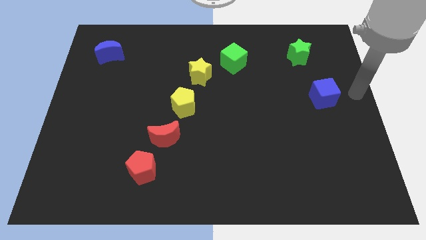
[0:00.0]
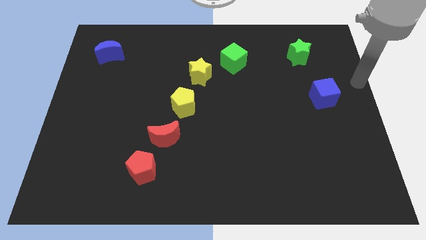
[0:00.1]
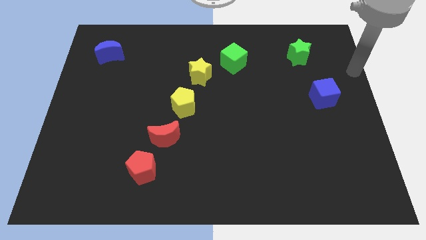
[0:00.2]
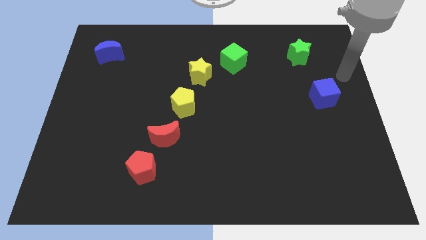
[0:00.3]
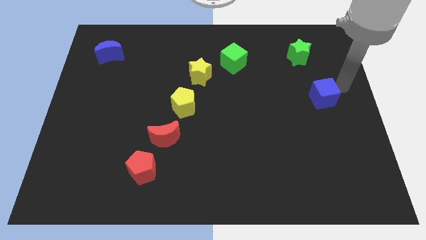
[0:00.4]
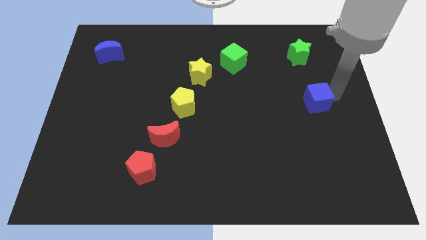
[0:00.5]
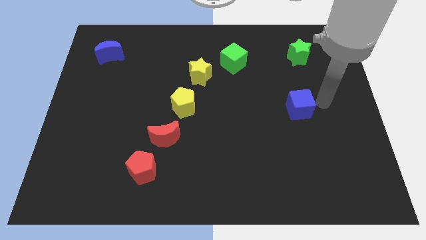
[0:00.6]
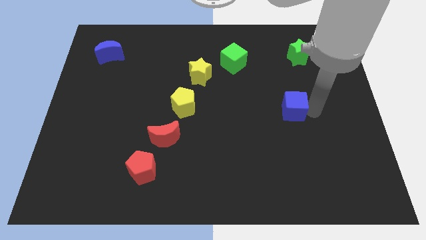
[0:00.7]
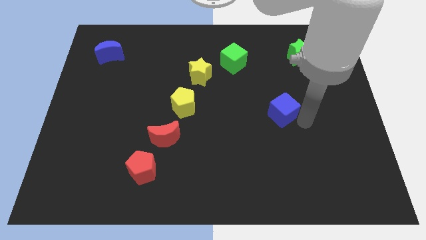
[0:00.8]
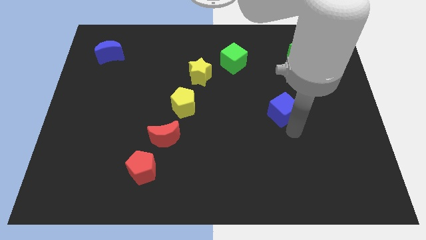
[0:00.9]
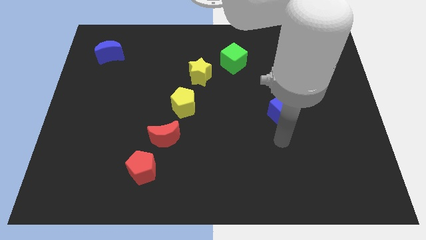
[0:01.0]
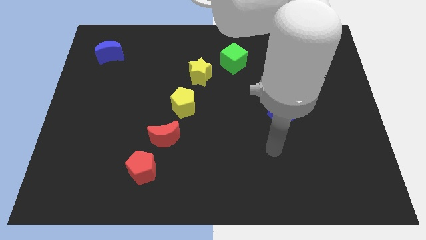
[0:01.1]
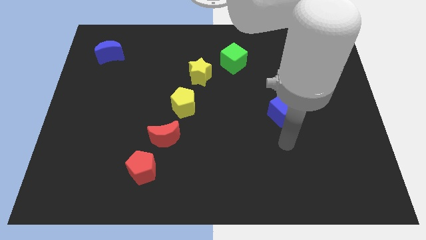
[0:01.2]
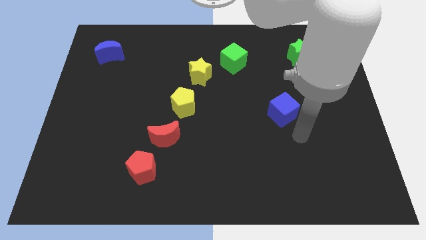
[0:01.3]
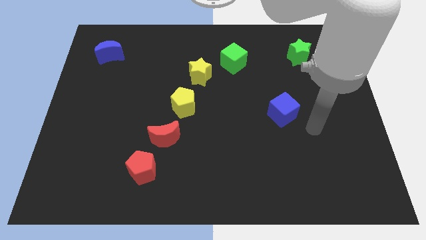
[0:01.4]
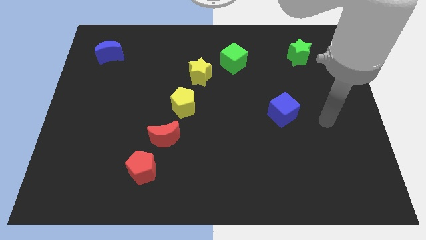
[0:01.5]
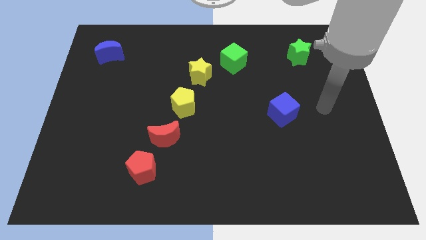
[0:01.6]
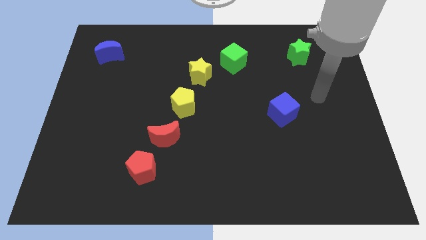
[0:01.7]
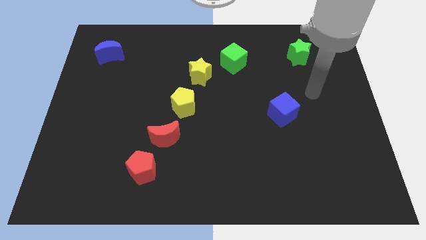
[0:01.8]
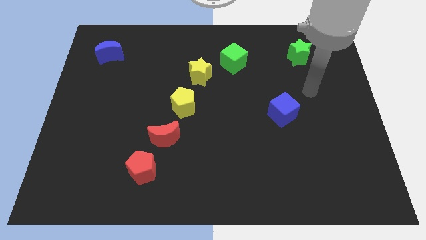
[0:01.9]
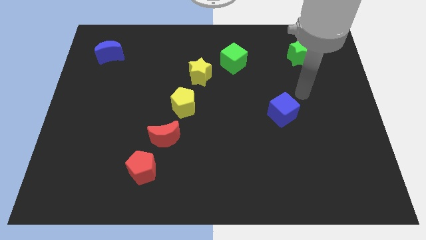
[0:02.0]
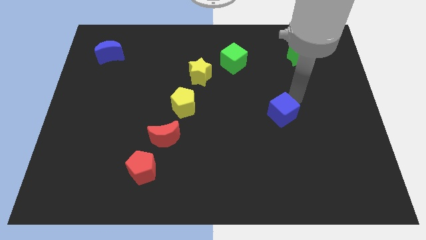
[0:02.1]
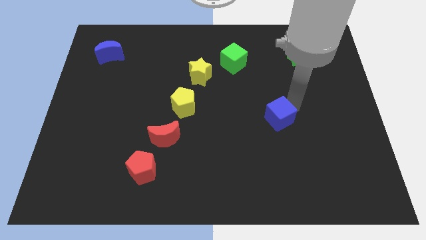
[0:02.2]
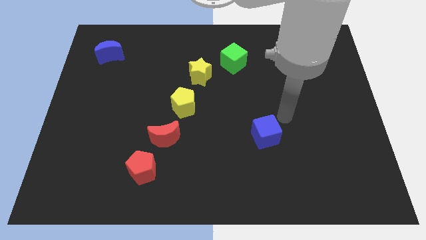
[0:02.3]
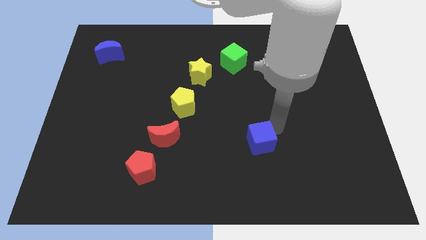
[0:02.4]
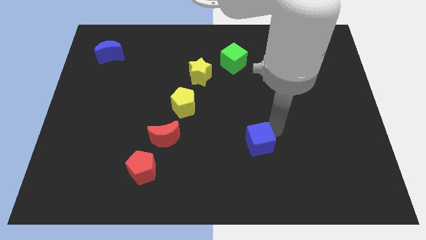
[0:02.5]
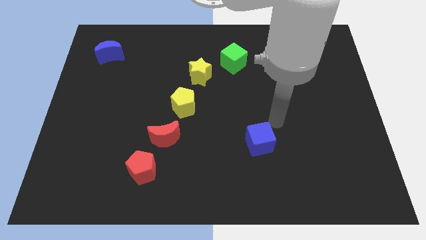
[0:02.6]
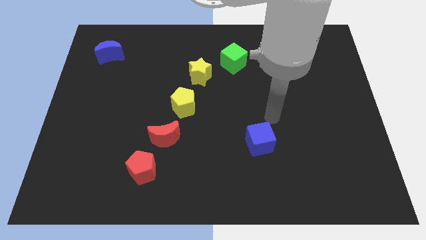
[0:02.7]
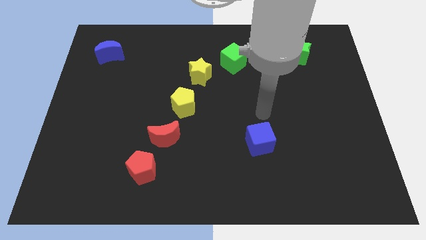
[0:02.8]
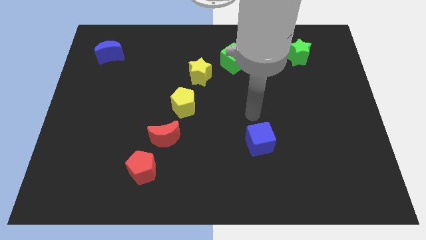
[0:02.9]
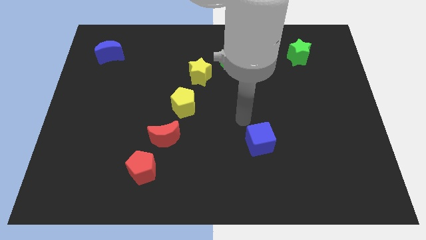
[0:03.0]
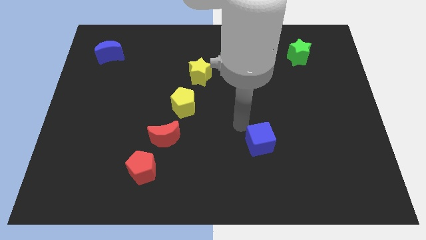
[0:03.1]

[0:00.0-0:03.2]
place the blue cube horizontal to the red crescent

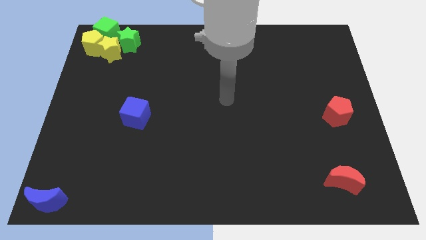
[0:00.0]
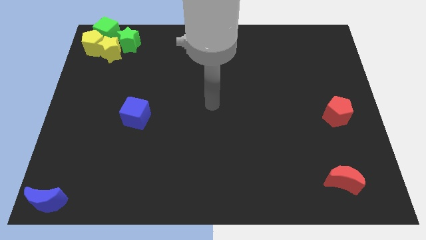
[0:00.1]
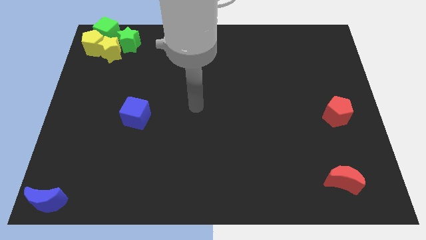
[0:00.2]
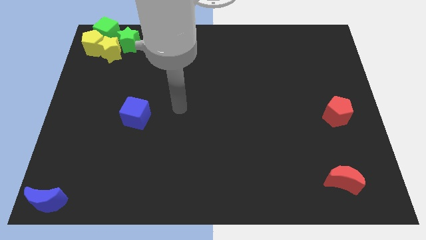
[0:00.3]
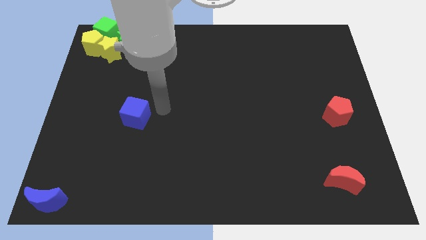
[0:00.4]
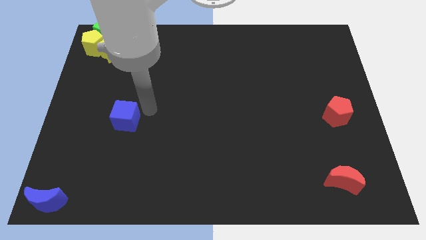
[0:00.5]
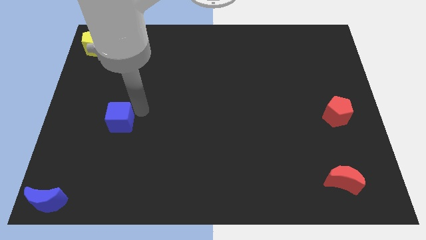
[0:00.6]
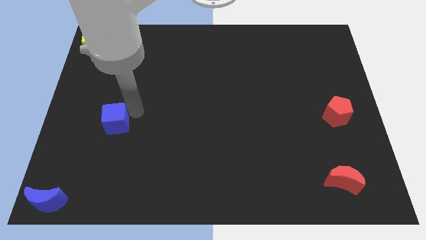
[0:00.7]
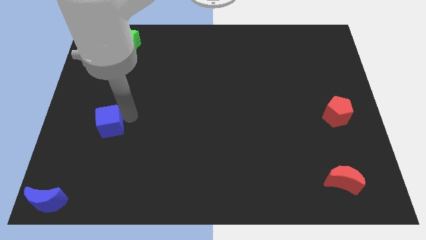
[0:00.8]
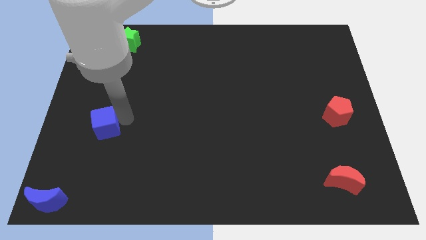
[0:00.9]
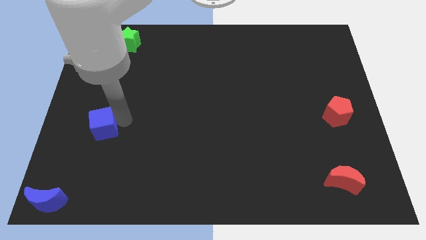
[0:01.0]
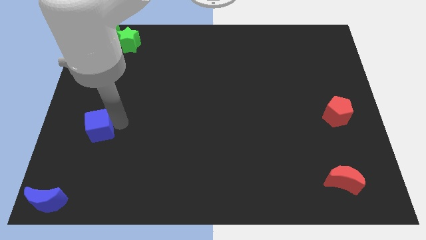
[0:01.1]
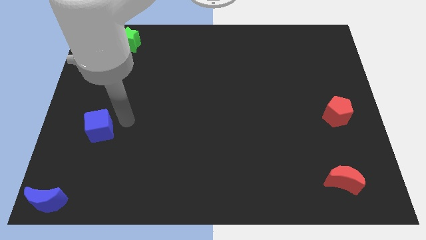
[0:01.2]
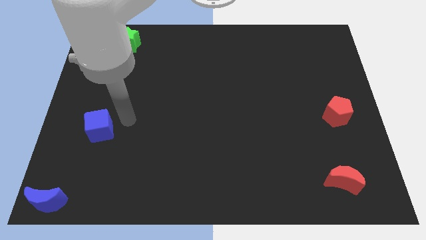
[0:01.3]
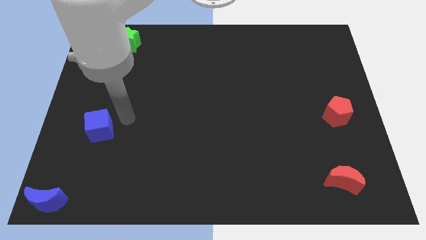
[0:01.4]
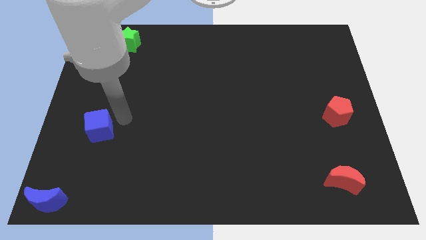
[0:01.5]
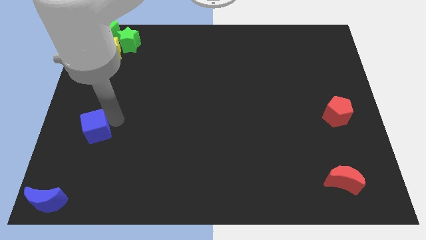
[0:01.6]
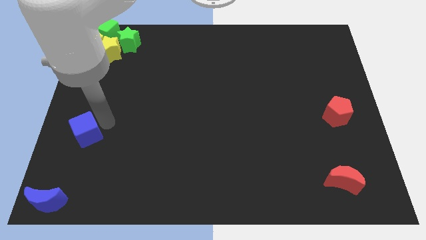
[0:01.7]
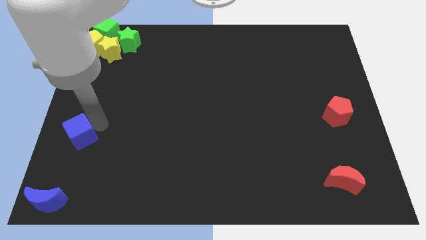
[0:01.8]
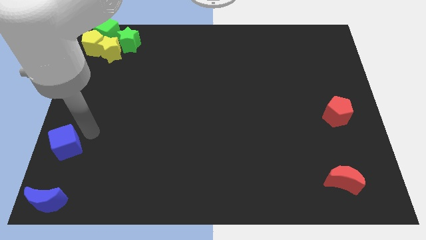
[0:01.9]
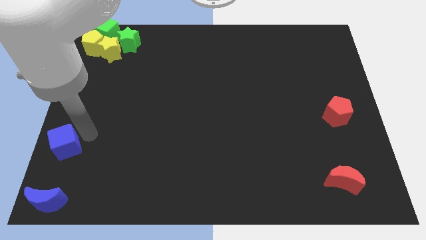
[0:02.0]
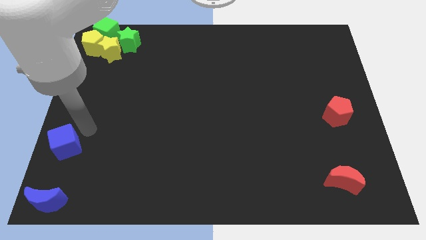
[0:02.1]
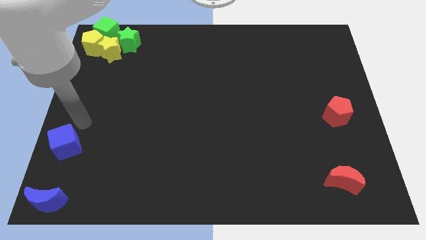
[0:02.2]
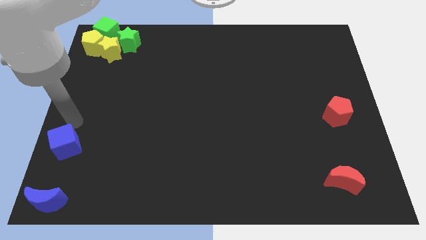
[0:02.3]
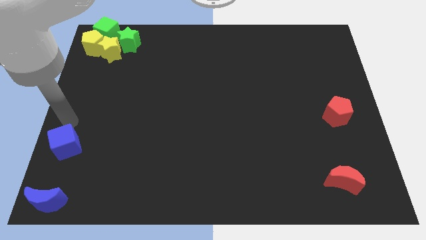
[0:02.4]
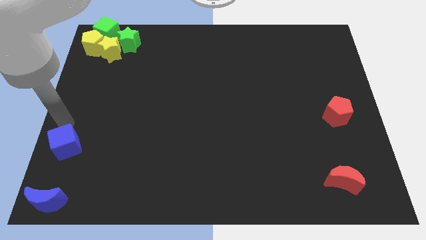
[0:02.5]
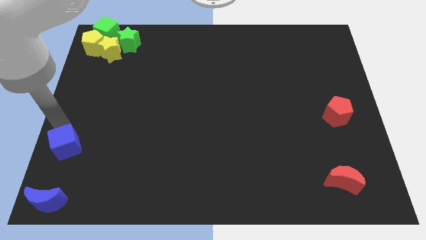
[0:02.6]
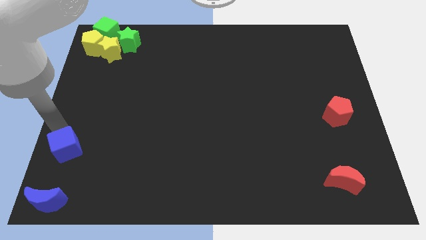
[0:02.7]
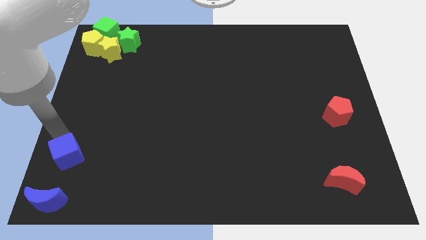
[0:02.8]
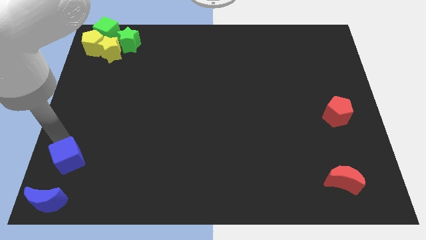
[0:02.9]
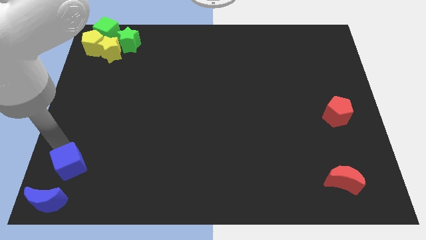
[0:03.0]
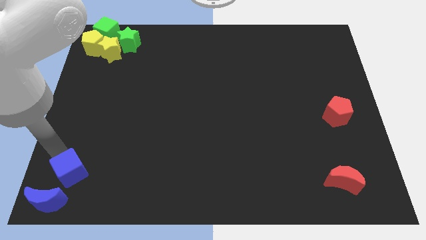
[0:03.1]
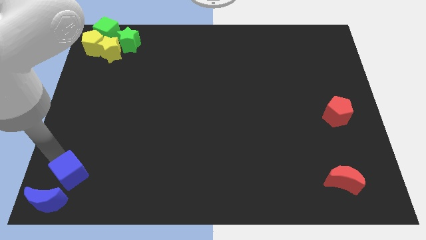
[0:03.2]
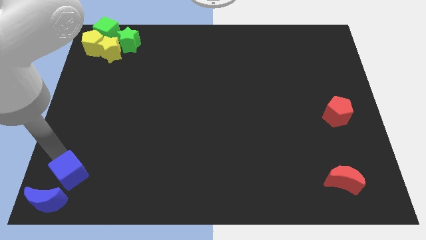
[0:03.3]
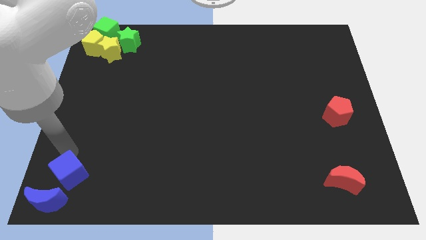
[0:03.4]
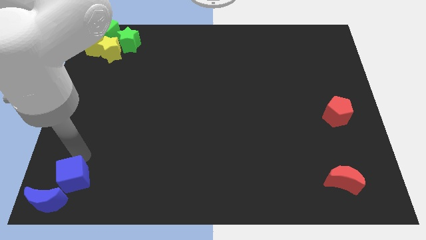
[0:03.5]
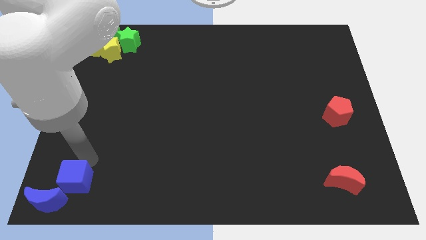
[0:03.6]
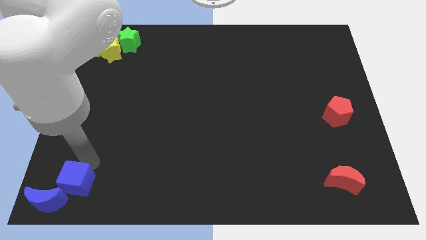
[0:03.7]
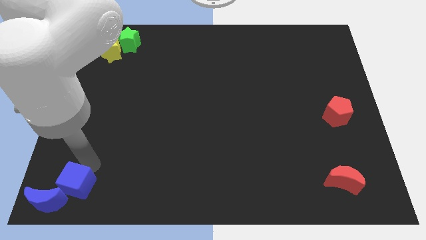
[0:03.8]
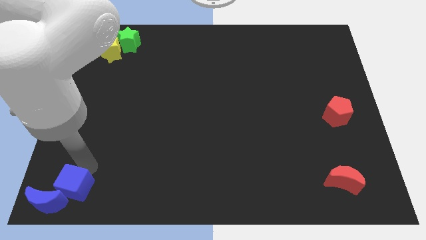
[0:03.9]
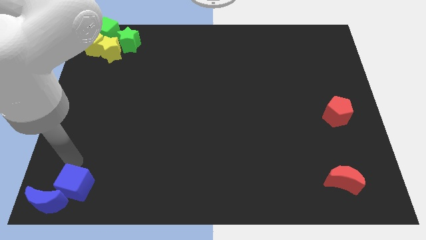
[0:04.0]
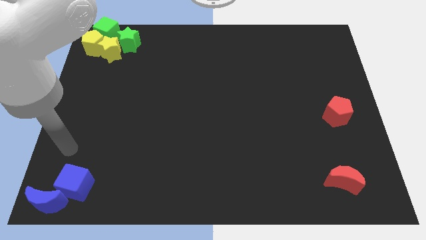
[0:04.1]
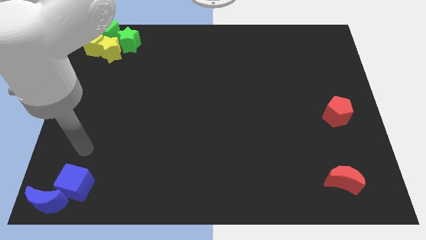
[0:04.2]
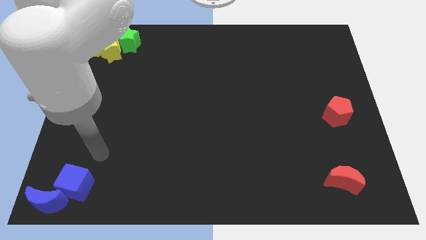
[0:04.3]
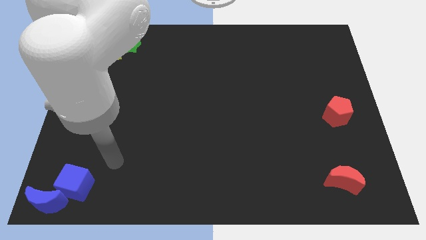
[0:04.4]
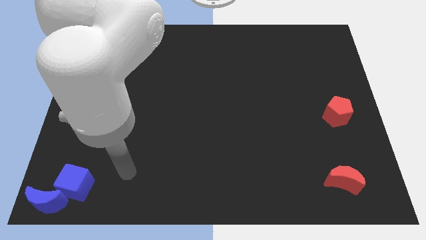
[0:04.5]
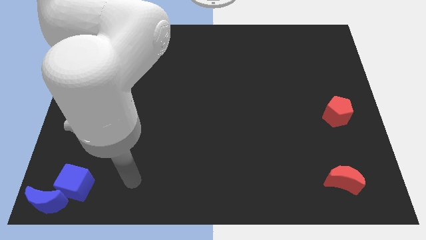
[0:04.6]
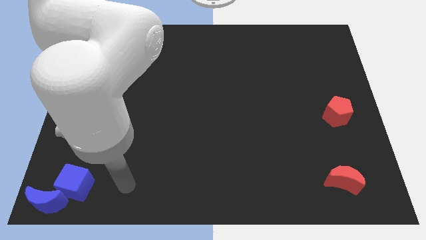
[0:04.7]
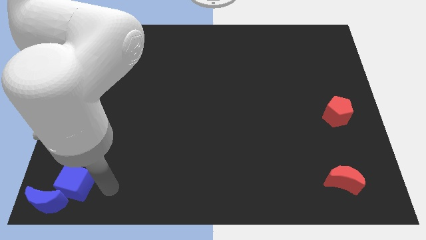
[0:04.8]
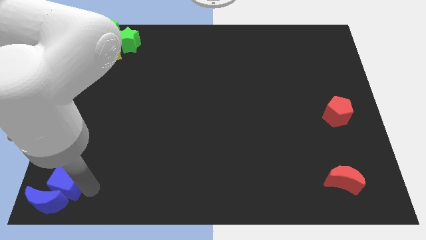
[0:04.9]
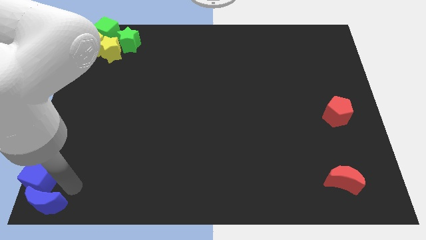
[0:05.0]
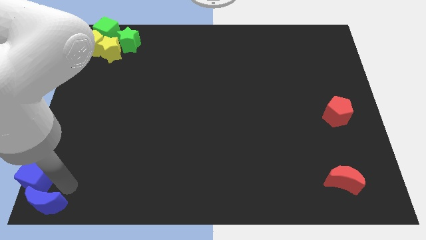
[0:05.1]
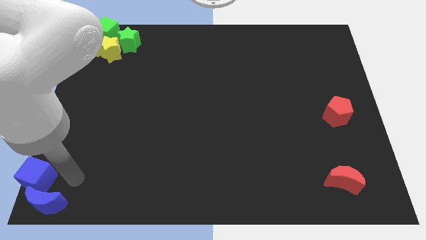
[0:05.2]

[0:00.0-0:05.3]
push the blue cube into the blue crescent

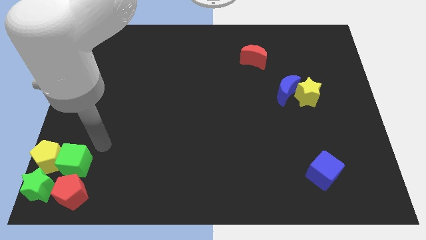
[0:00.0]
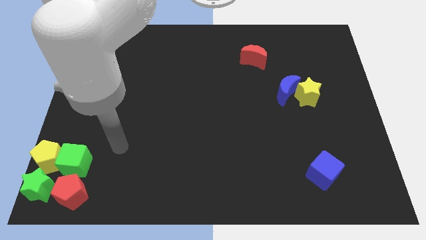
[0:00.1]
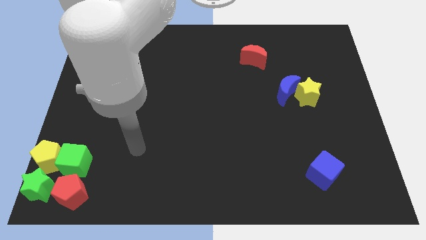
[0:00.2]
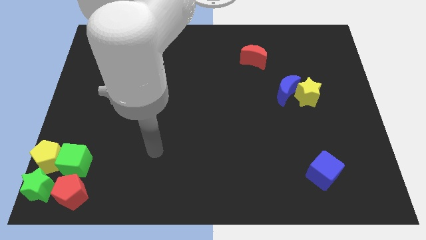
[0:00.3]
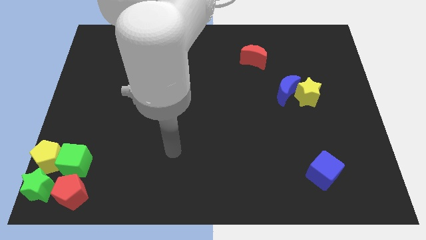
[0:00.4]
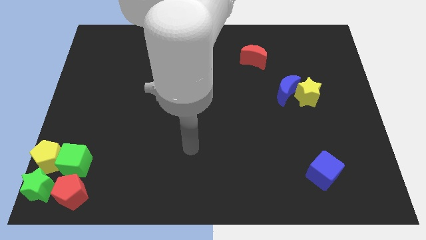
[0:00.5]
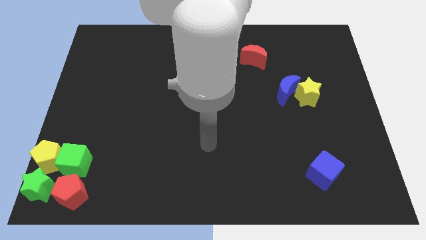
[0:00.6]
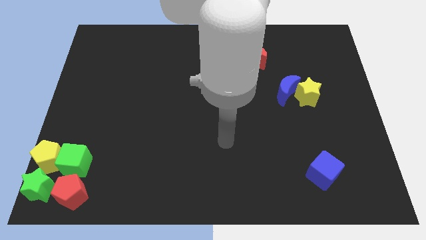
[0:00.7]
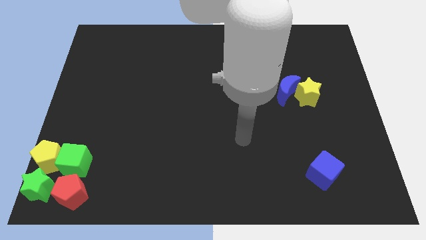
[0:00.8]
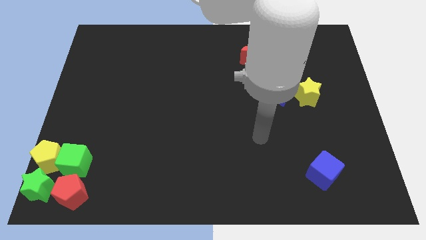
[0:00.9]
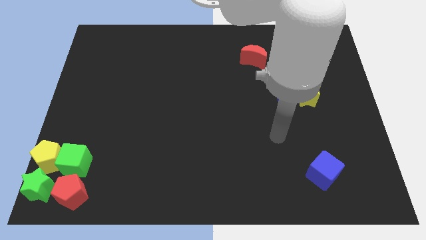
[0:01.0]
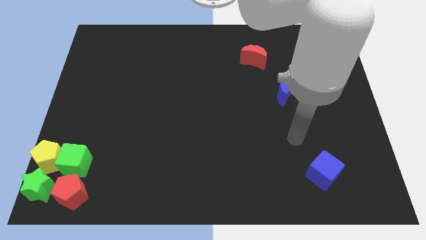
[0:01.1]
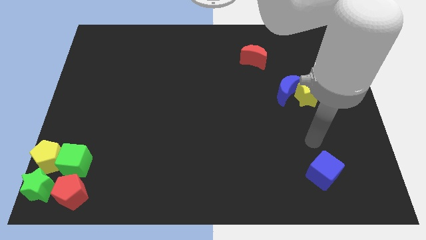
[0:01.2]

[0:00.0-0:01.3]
place your hand vertically under the yellow starv
